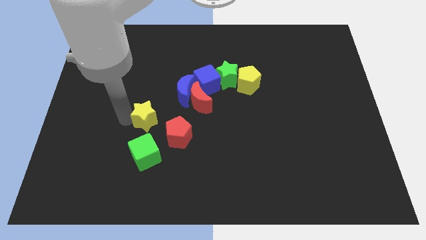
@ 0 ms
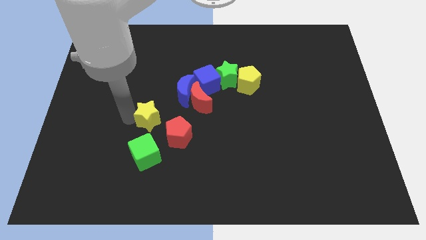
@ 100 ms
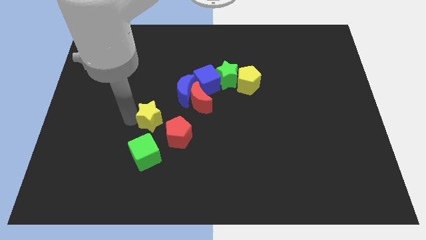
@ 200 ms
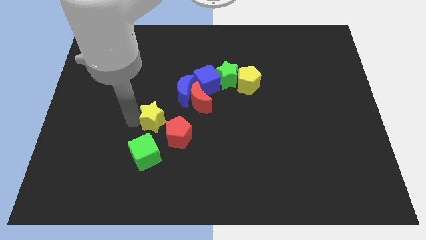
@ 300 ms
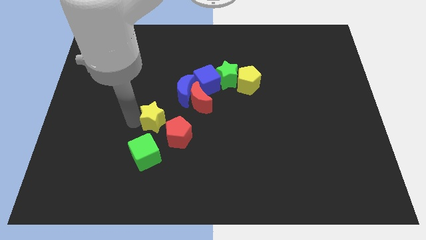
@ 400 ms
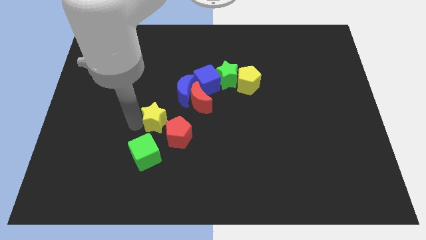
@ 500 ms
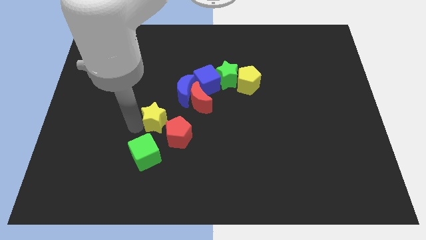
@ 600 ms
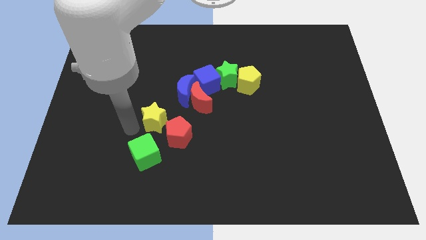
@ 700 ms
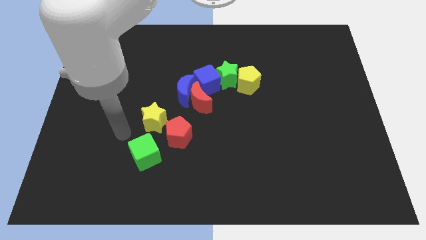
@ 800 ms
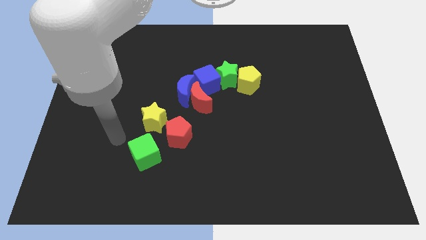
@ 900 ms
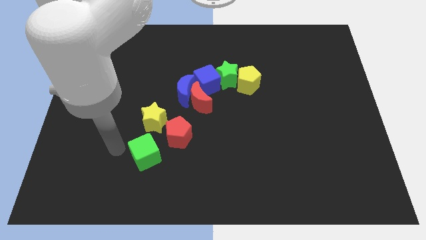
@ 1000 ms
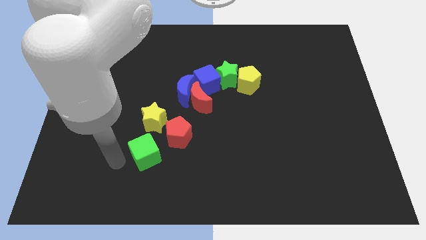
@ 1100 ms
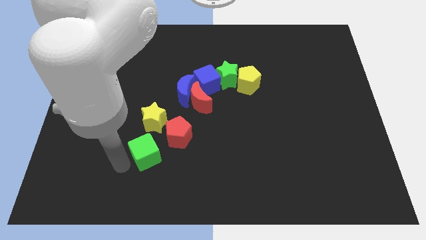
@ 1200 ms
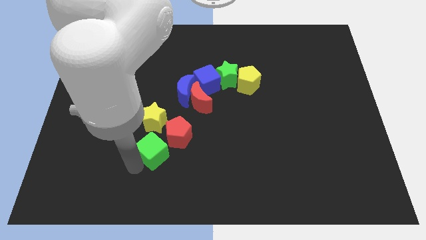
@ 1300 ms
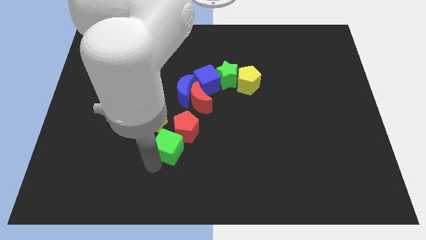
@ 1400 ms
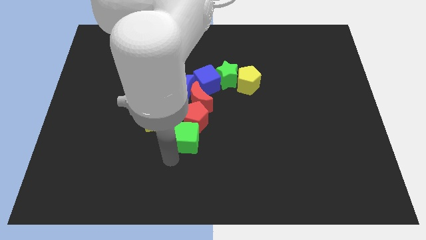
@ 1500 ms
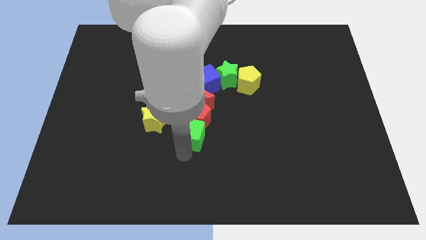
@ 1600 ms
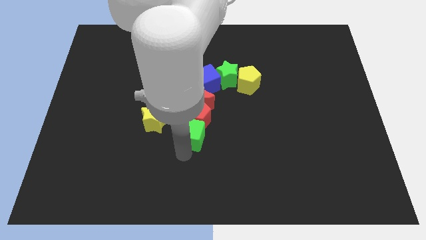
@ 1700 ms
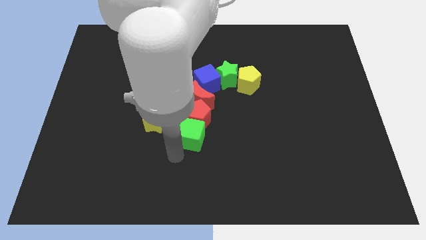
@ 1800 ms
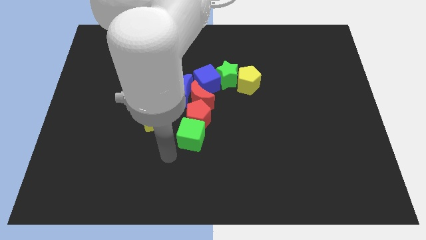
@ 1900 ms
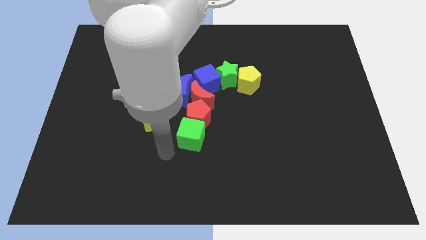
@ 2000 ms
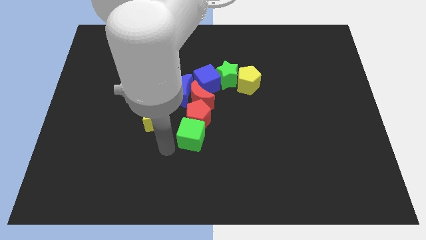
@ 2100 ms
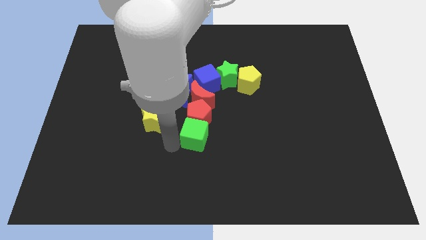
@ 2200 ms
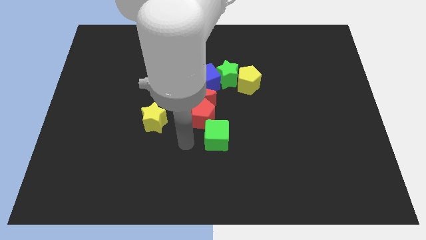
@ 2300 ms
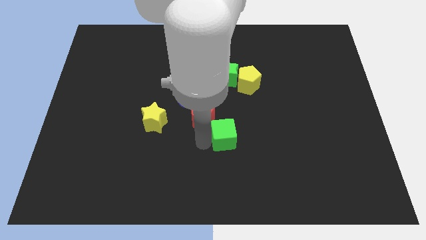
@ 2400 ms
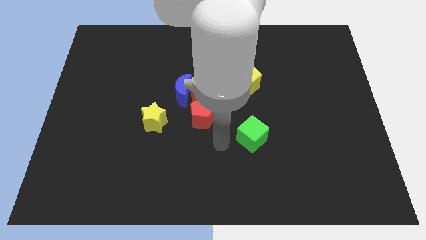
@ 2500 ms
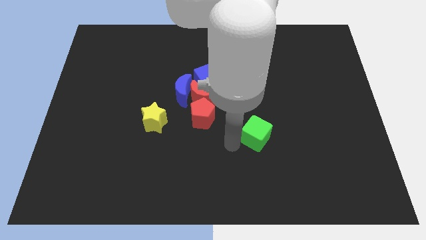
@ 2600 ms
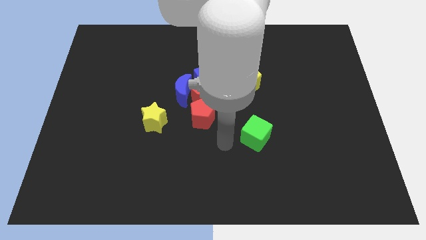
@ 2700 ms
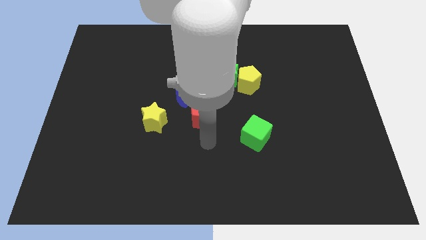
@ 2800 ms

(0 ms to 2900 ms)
slightly move the green cube towards the right

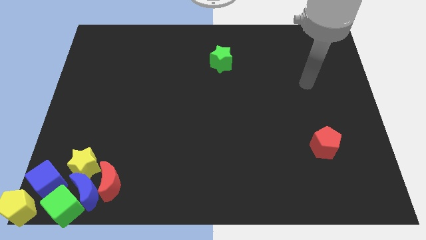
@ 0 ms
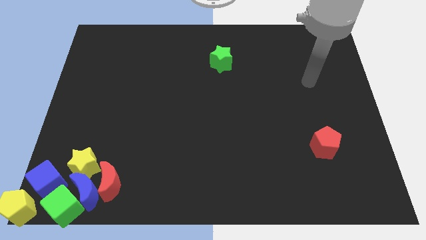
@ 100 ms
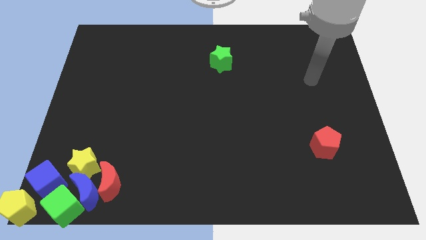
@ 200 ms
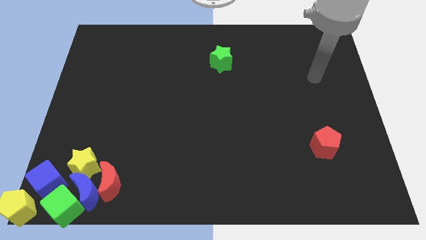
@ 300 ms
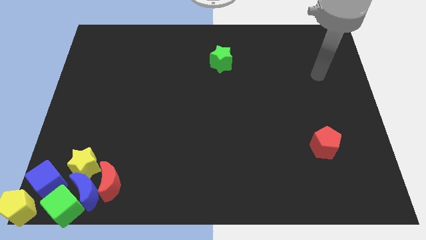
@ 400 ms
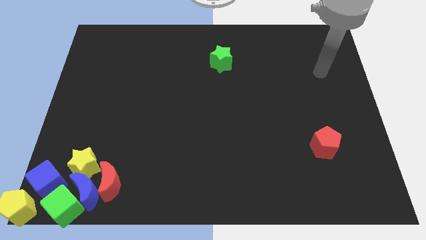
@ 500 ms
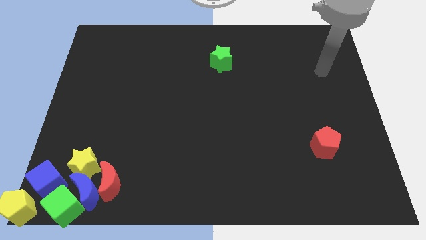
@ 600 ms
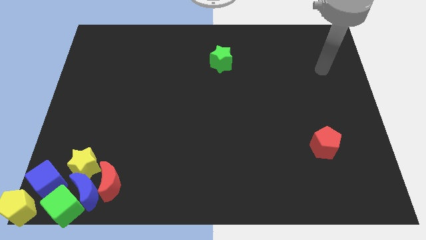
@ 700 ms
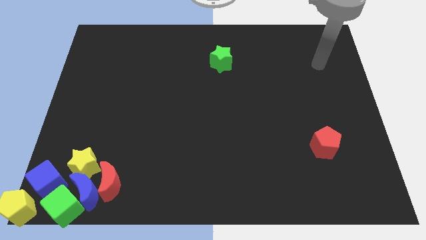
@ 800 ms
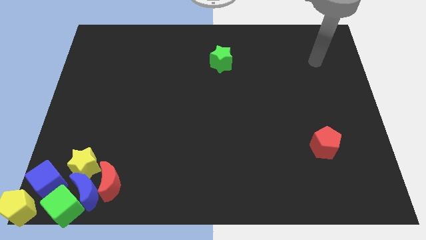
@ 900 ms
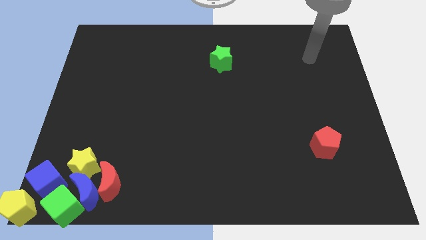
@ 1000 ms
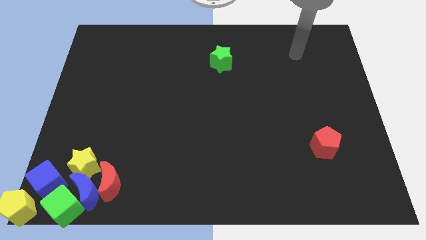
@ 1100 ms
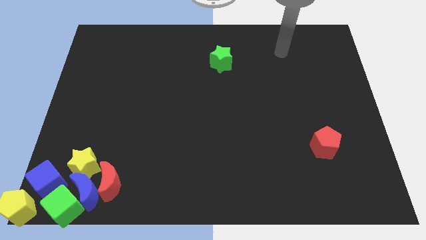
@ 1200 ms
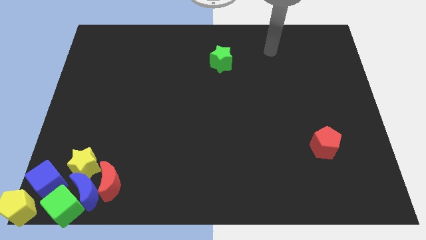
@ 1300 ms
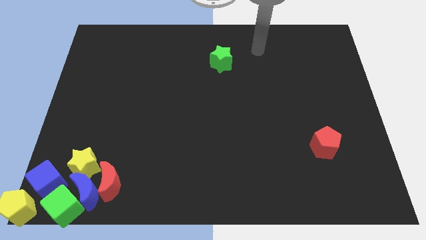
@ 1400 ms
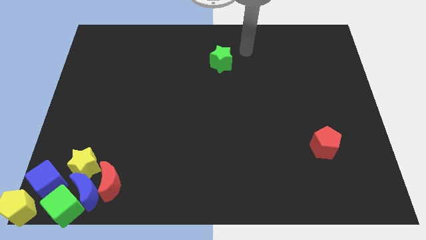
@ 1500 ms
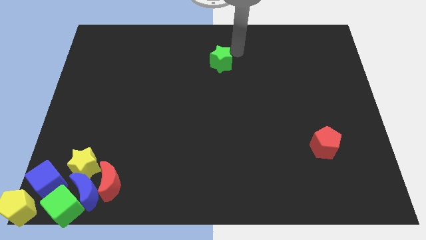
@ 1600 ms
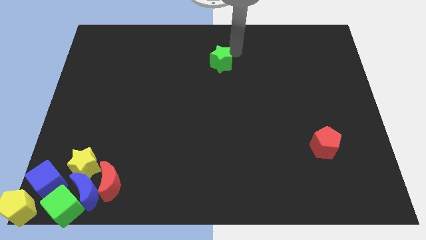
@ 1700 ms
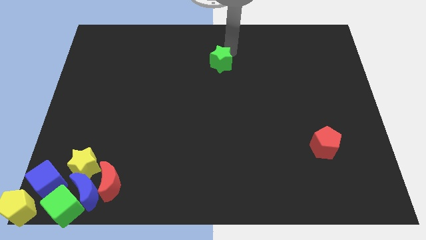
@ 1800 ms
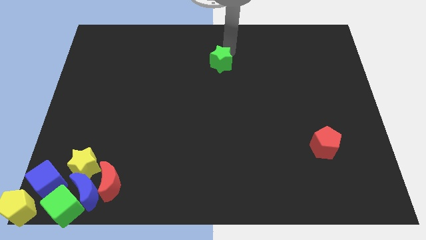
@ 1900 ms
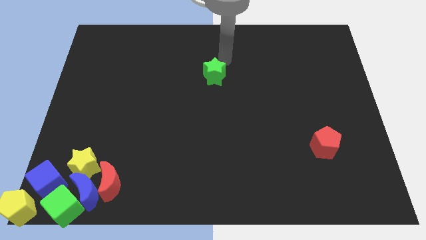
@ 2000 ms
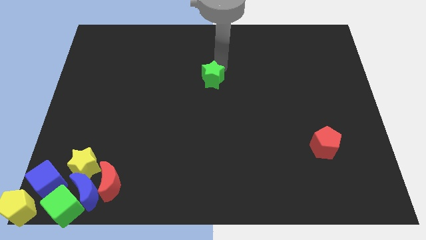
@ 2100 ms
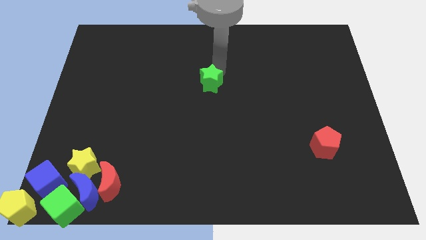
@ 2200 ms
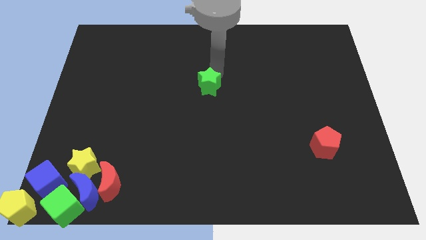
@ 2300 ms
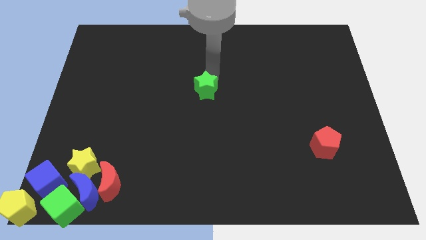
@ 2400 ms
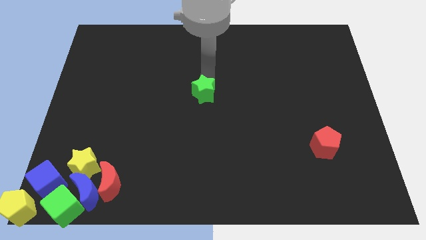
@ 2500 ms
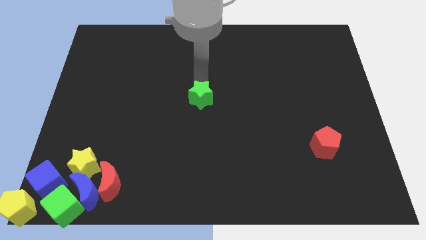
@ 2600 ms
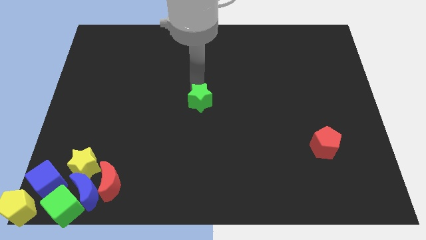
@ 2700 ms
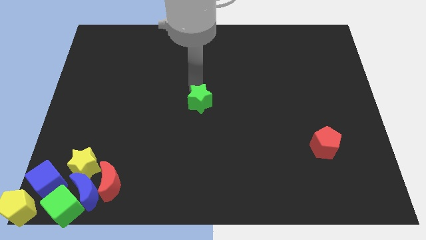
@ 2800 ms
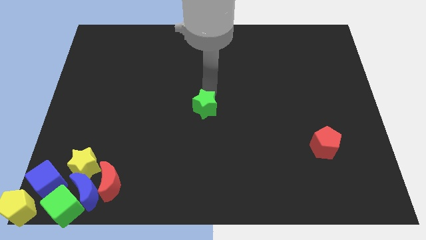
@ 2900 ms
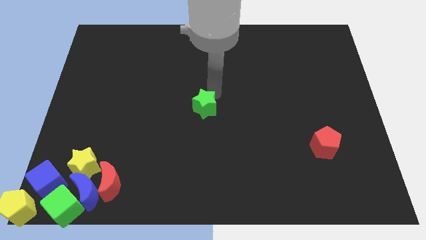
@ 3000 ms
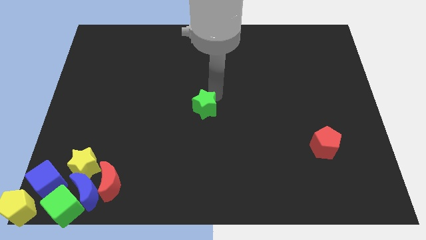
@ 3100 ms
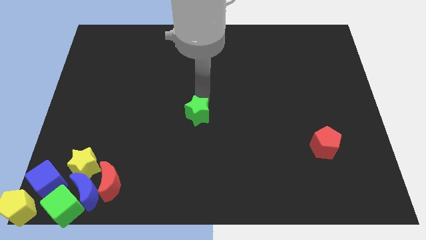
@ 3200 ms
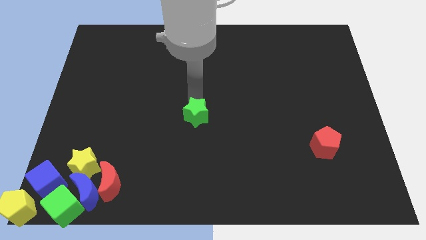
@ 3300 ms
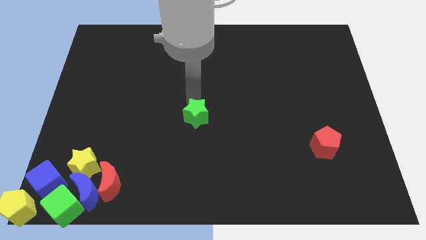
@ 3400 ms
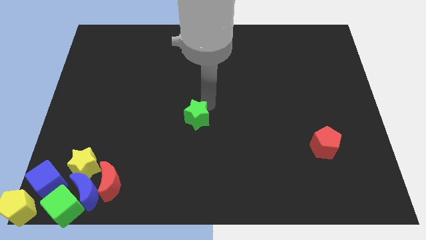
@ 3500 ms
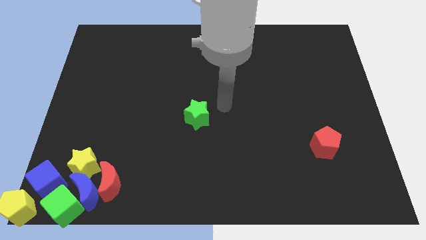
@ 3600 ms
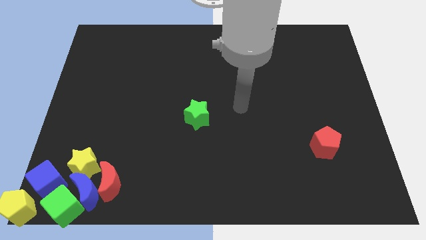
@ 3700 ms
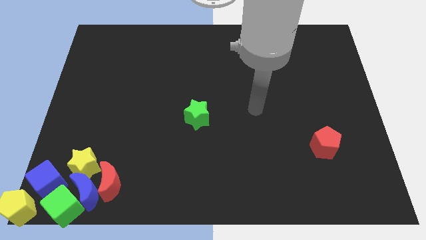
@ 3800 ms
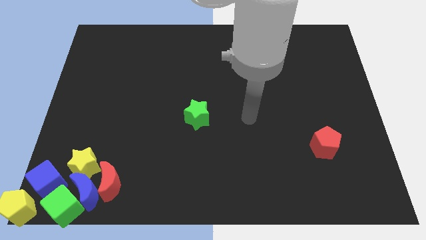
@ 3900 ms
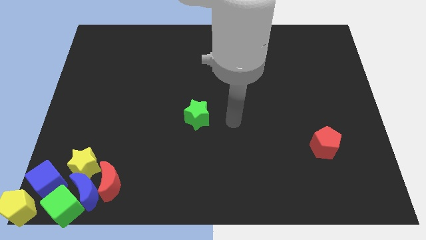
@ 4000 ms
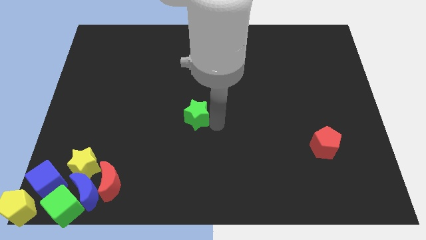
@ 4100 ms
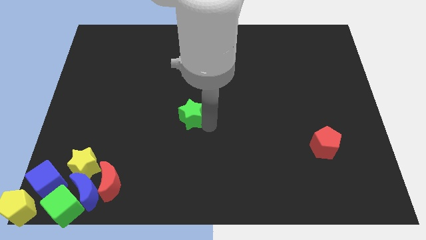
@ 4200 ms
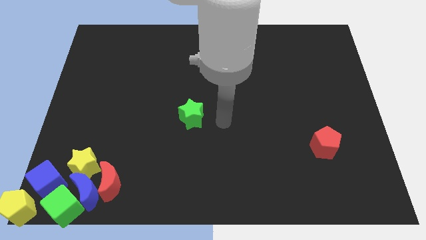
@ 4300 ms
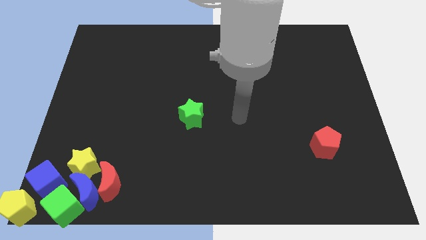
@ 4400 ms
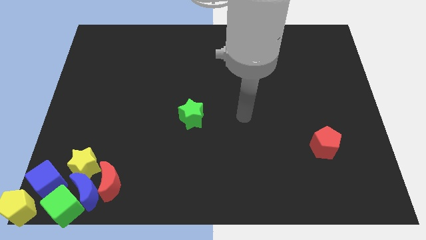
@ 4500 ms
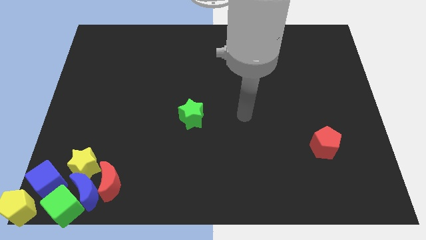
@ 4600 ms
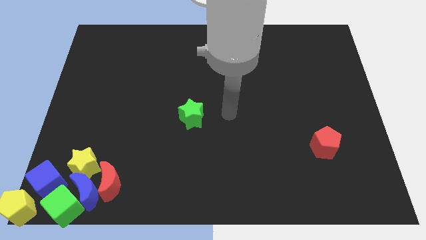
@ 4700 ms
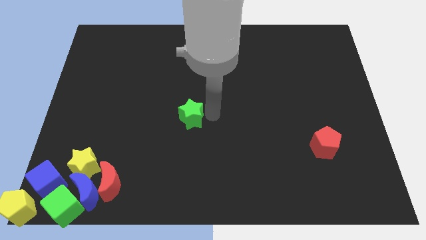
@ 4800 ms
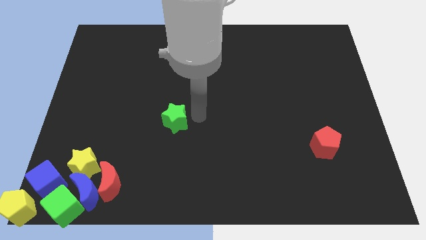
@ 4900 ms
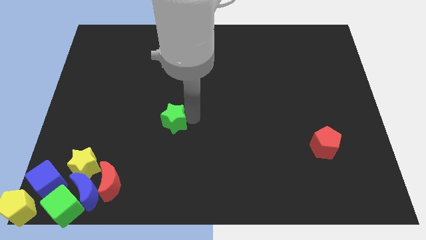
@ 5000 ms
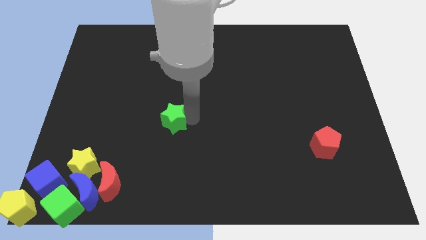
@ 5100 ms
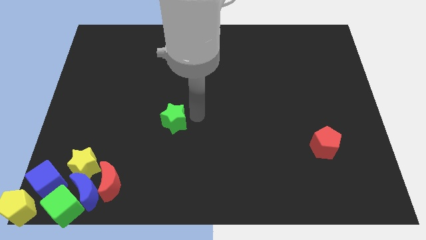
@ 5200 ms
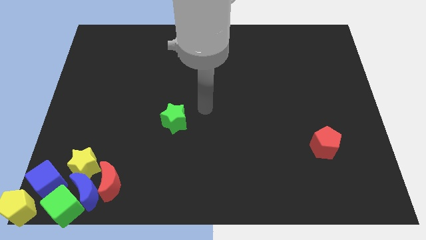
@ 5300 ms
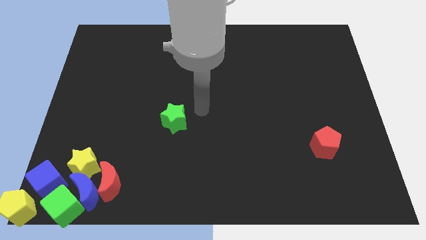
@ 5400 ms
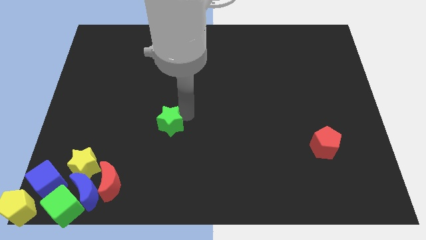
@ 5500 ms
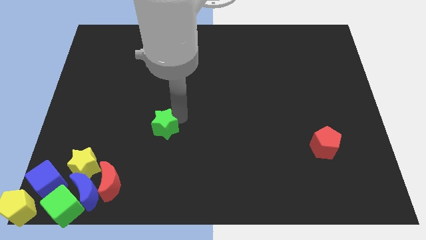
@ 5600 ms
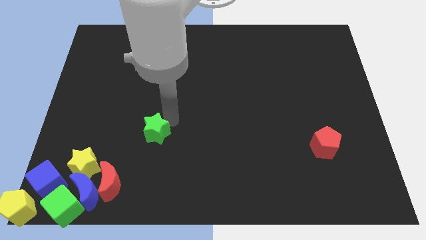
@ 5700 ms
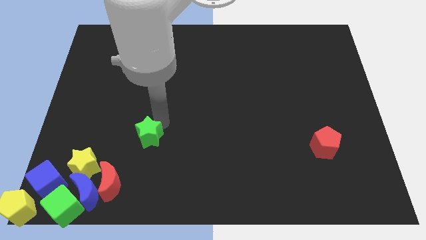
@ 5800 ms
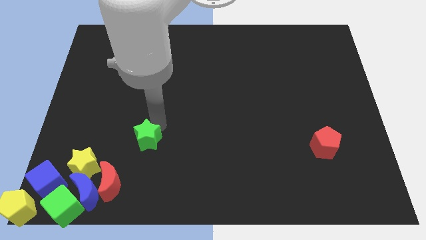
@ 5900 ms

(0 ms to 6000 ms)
put the green star to the left of the red pentagon

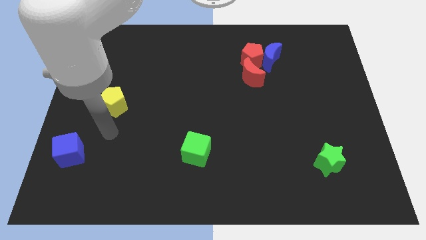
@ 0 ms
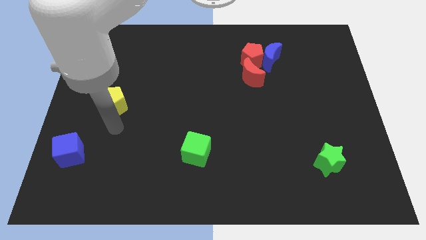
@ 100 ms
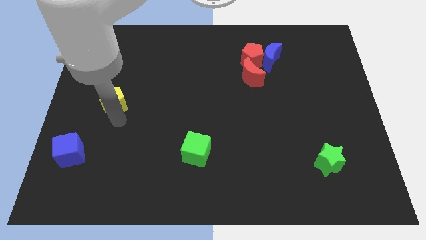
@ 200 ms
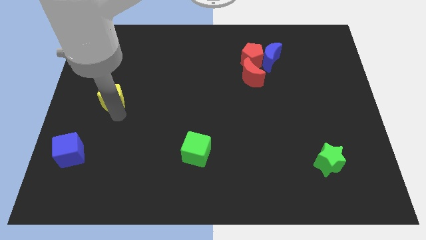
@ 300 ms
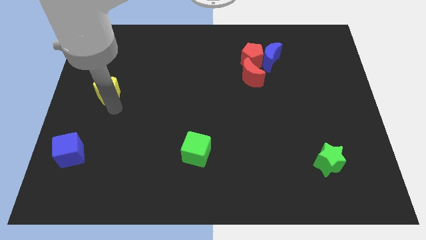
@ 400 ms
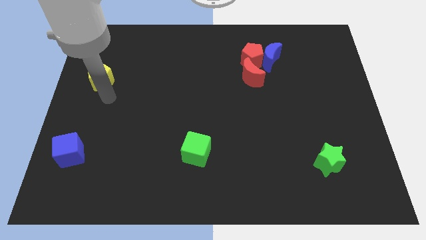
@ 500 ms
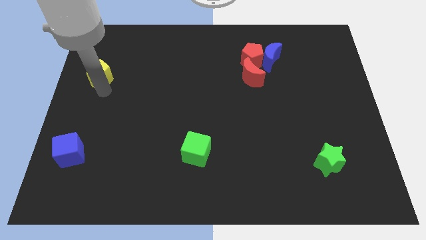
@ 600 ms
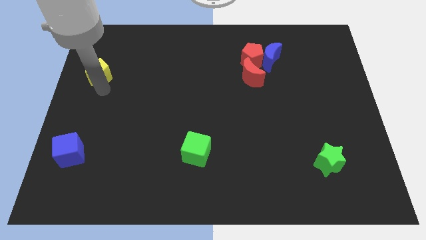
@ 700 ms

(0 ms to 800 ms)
move the yellow pentagon to the top left of the board
